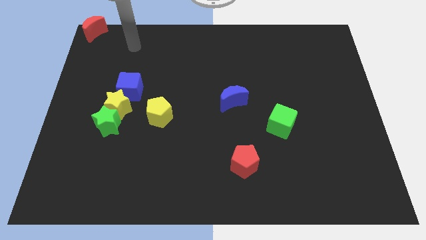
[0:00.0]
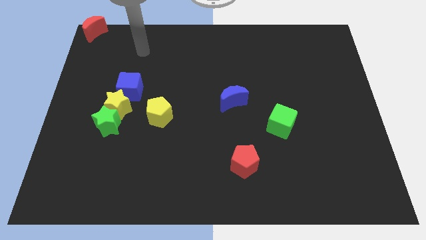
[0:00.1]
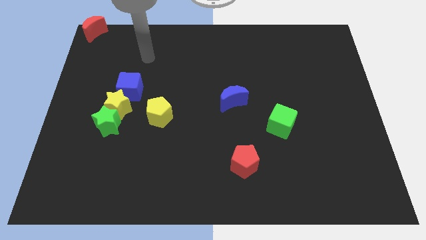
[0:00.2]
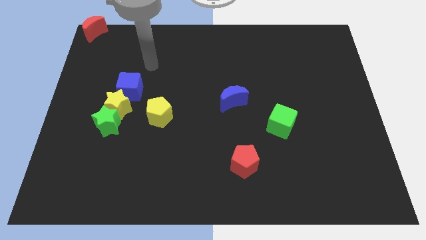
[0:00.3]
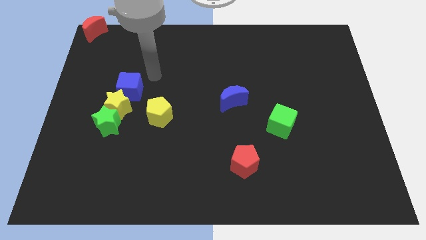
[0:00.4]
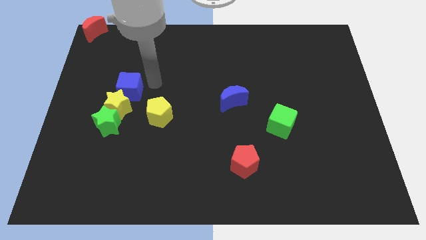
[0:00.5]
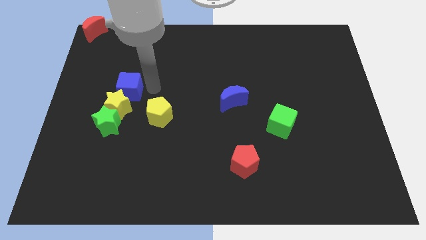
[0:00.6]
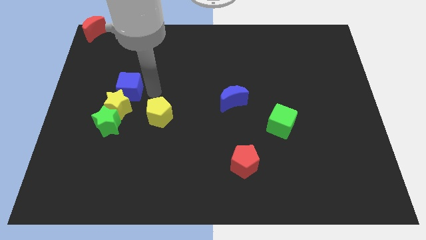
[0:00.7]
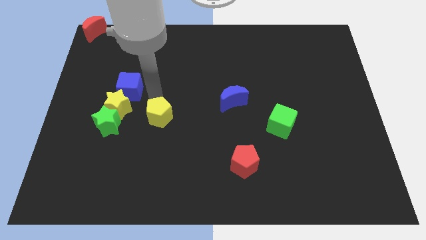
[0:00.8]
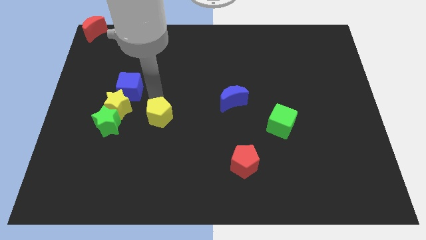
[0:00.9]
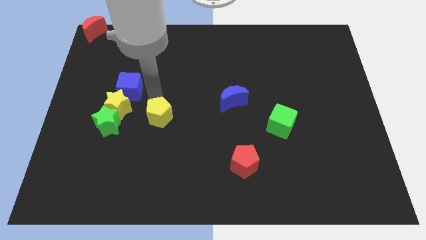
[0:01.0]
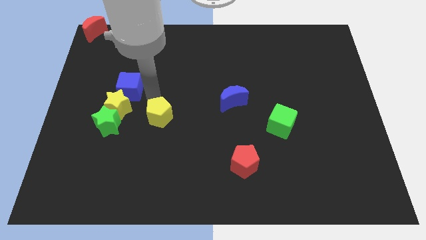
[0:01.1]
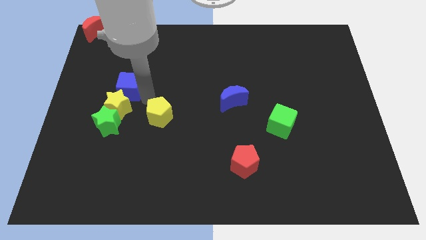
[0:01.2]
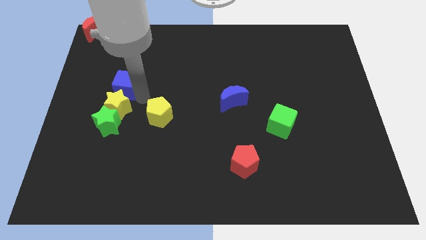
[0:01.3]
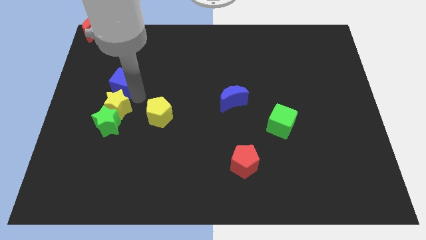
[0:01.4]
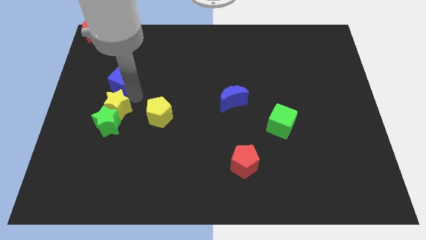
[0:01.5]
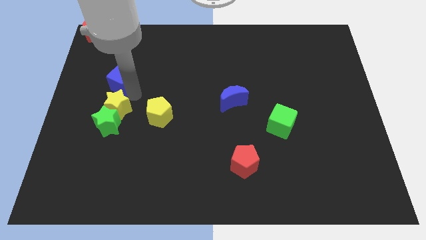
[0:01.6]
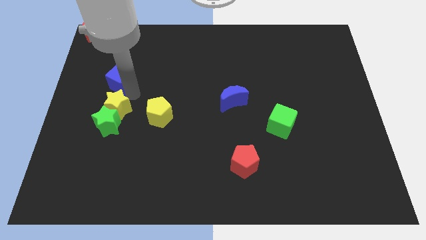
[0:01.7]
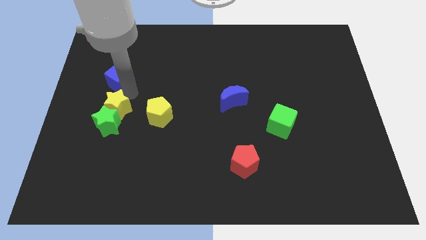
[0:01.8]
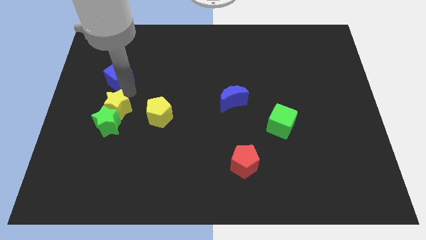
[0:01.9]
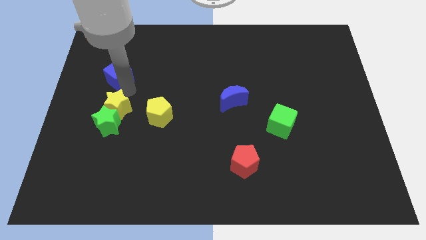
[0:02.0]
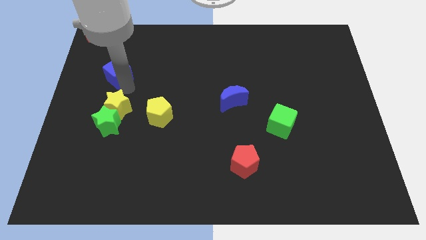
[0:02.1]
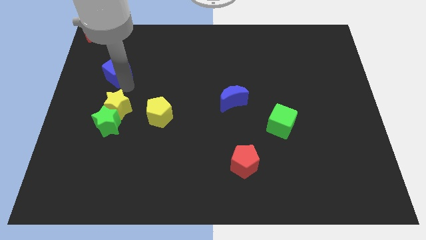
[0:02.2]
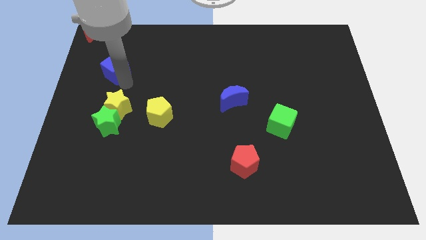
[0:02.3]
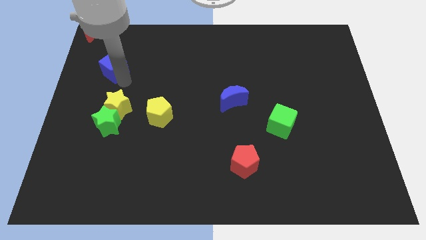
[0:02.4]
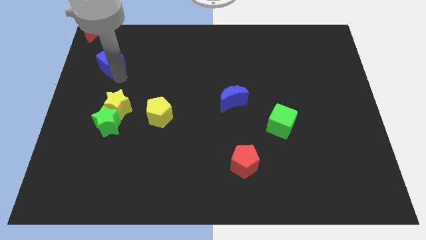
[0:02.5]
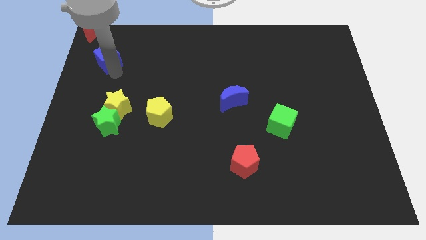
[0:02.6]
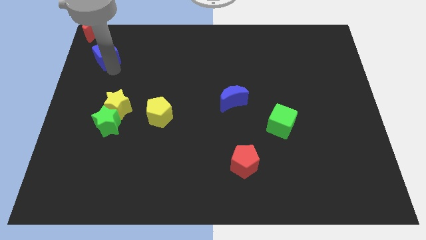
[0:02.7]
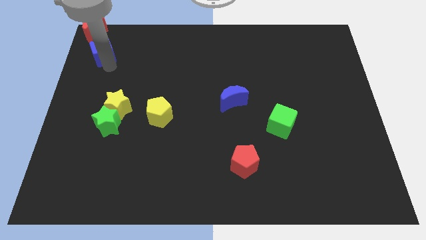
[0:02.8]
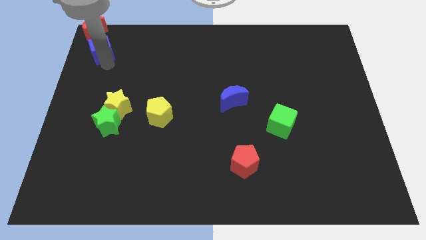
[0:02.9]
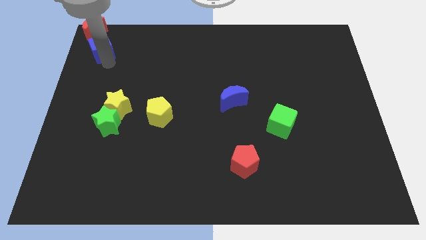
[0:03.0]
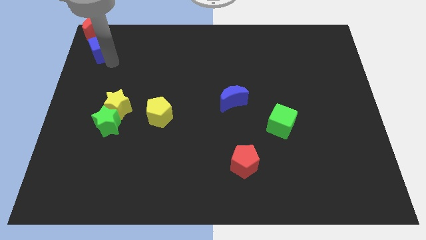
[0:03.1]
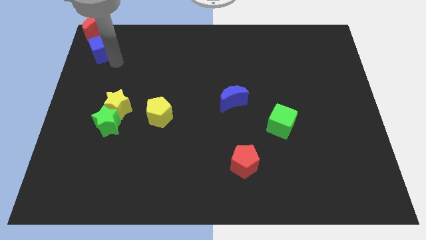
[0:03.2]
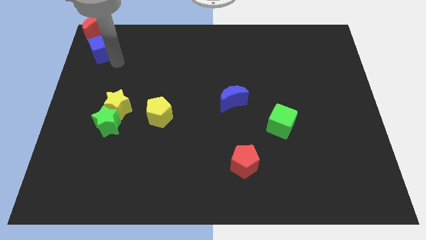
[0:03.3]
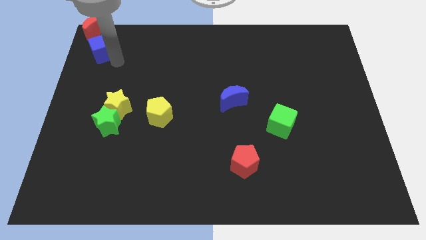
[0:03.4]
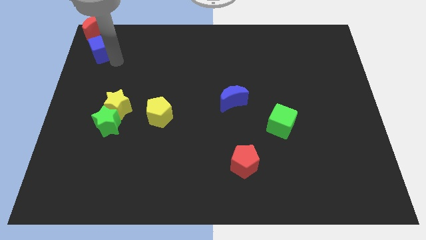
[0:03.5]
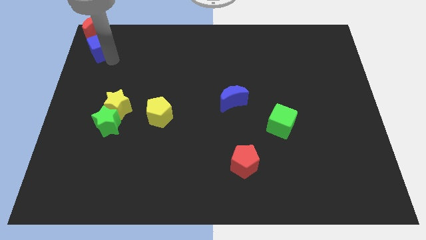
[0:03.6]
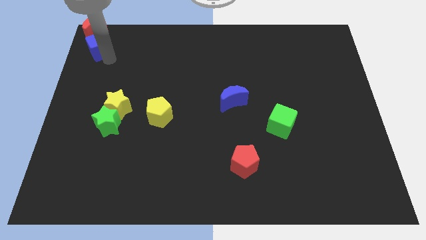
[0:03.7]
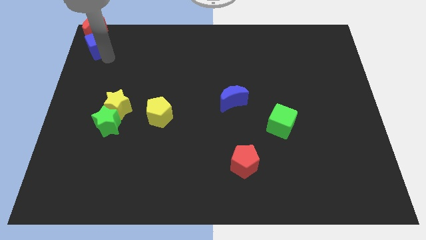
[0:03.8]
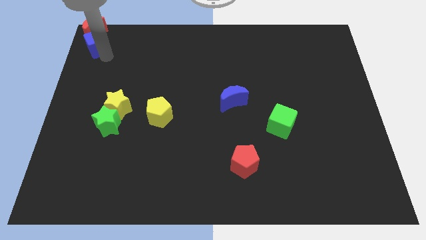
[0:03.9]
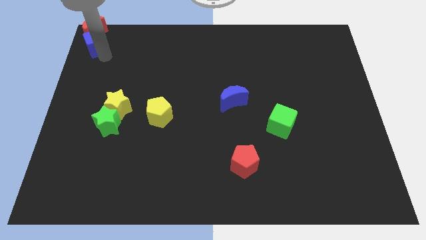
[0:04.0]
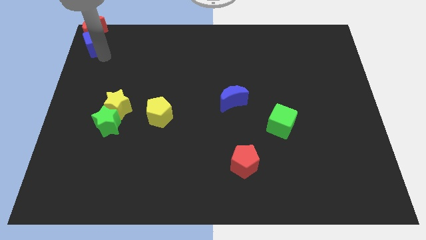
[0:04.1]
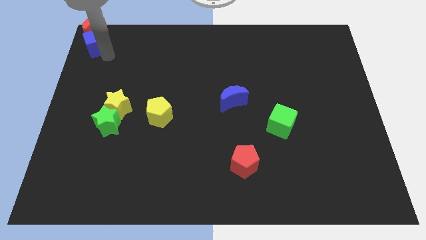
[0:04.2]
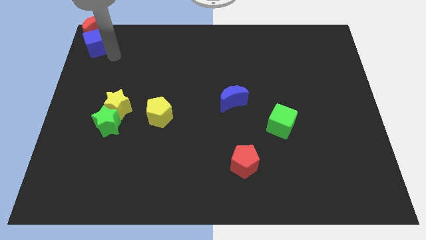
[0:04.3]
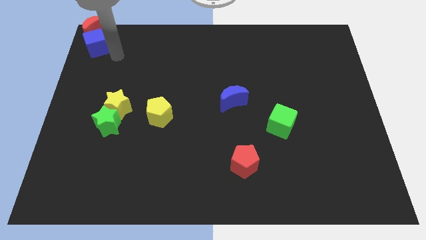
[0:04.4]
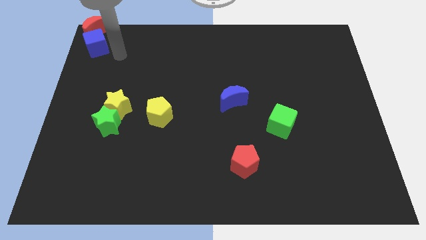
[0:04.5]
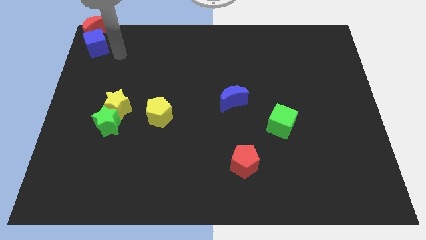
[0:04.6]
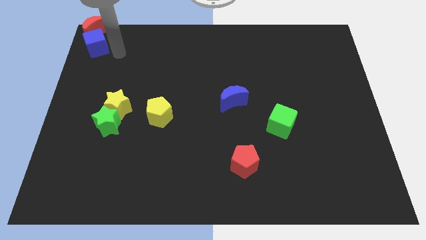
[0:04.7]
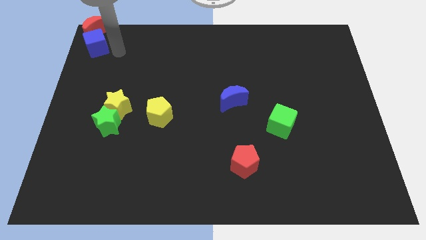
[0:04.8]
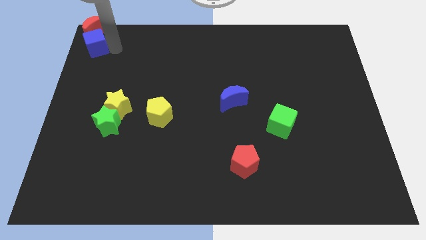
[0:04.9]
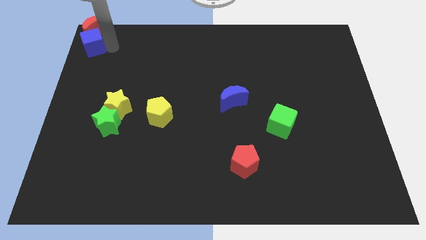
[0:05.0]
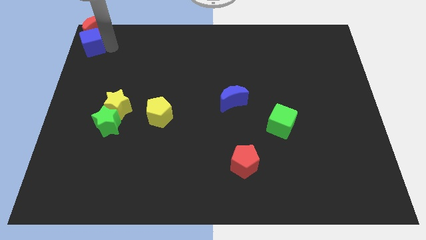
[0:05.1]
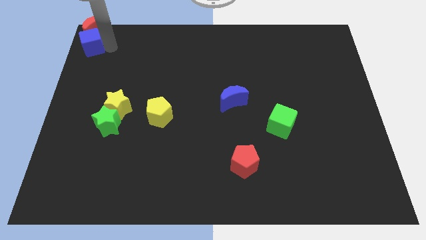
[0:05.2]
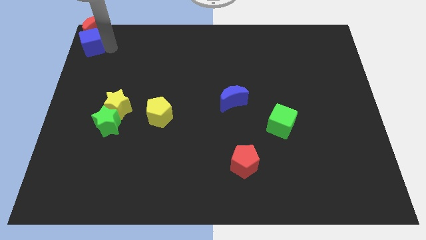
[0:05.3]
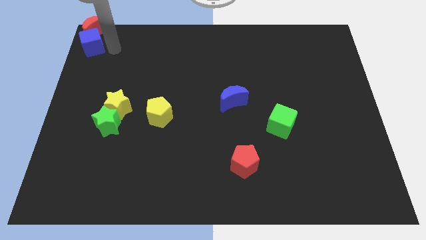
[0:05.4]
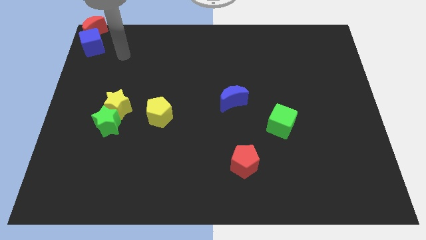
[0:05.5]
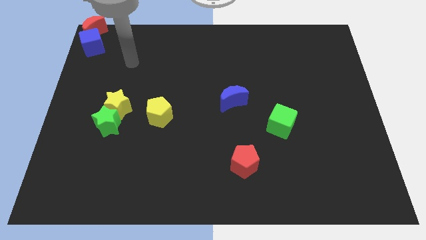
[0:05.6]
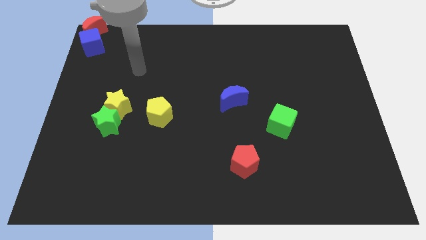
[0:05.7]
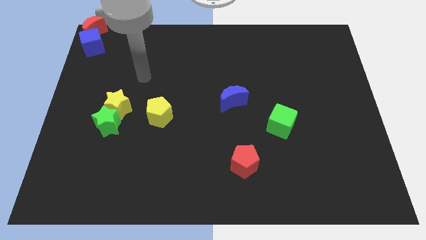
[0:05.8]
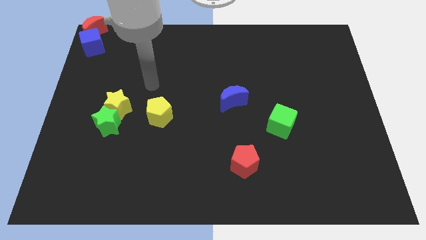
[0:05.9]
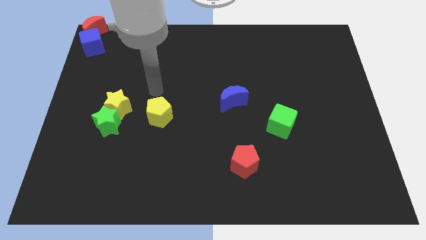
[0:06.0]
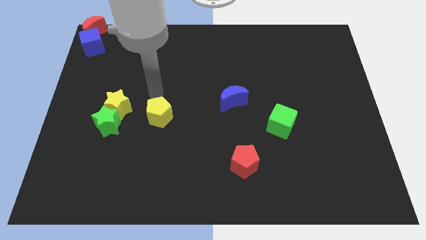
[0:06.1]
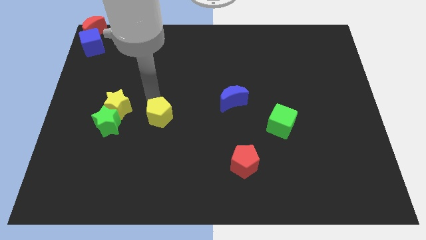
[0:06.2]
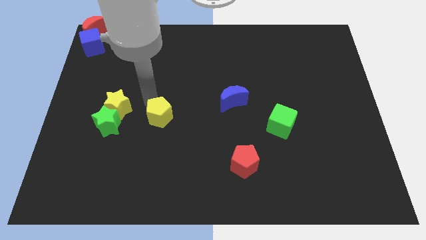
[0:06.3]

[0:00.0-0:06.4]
push the blue cube to the top left corner

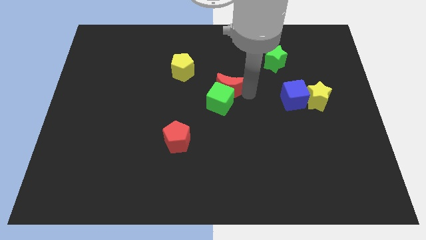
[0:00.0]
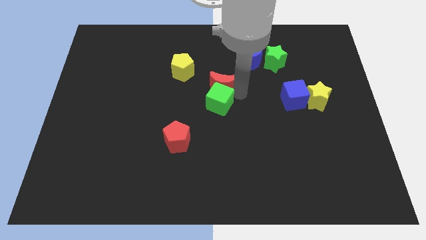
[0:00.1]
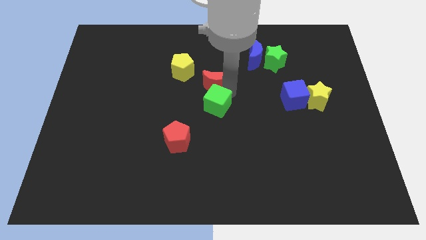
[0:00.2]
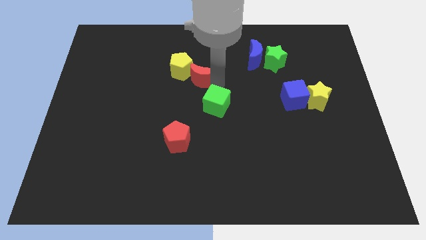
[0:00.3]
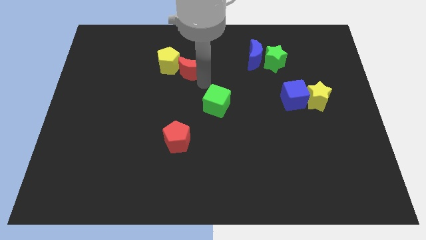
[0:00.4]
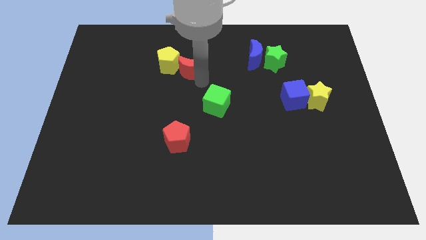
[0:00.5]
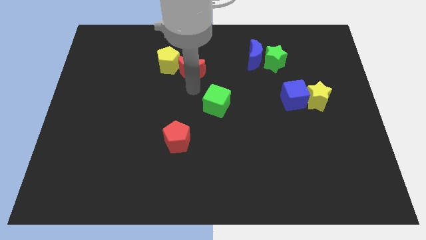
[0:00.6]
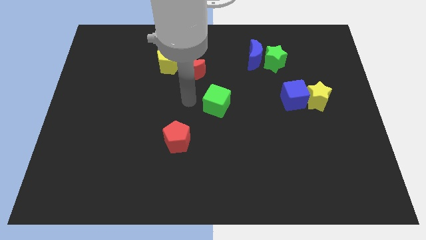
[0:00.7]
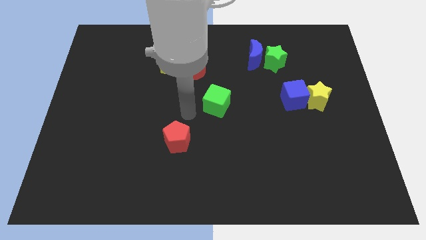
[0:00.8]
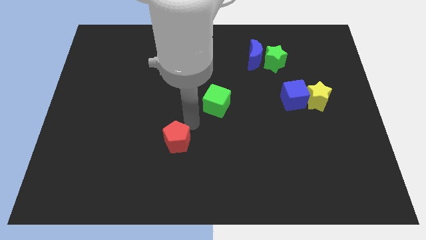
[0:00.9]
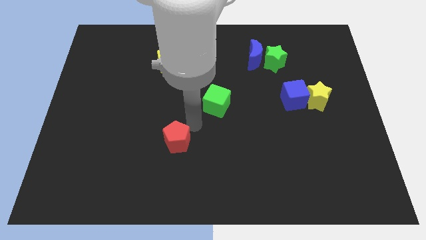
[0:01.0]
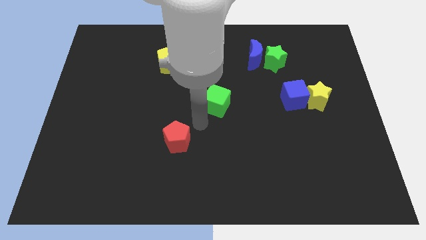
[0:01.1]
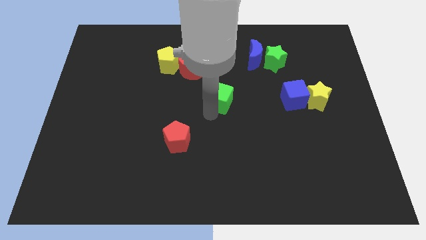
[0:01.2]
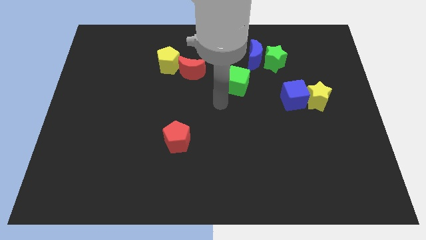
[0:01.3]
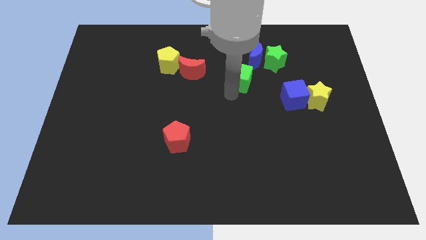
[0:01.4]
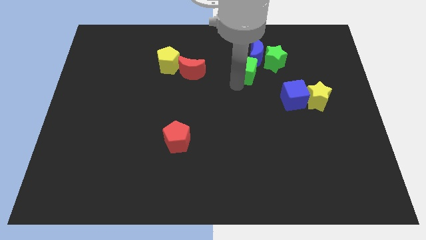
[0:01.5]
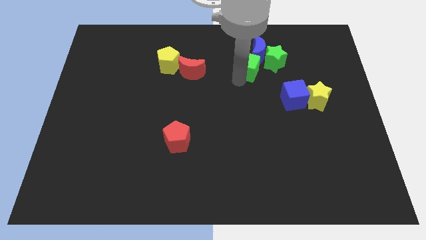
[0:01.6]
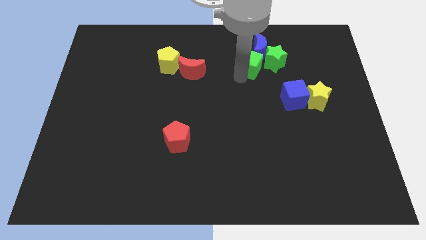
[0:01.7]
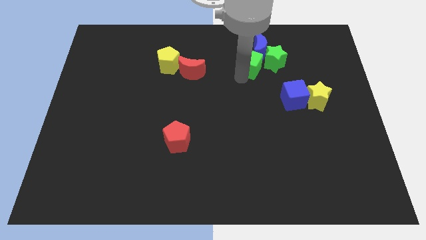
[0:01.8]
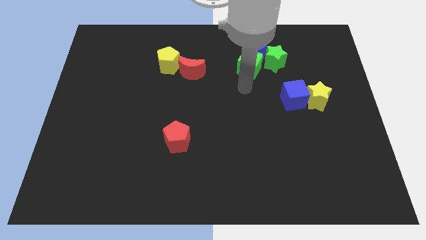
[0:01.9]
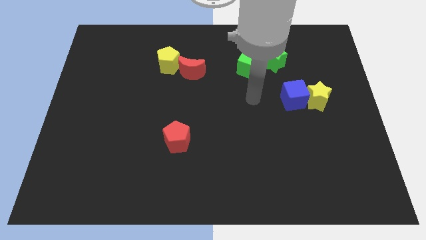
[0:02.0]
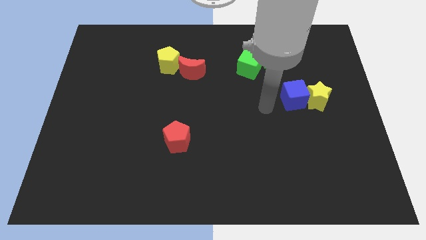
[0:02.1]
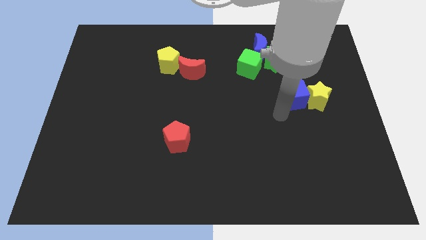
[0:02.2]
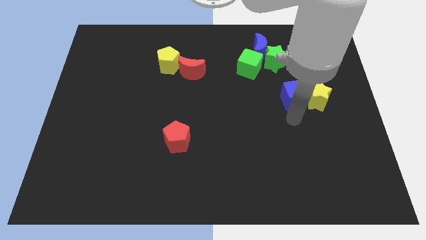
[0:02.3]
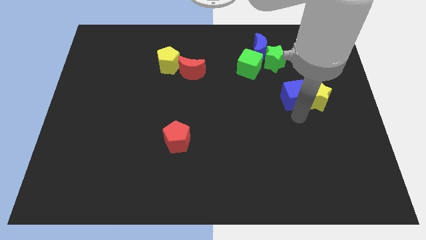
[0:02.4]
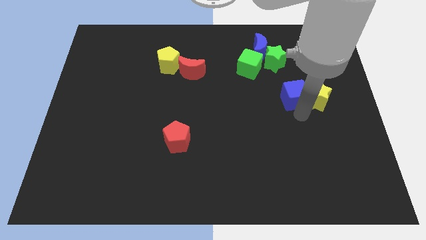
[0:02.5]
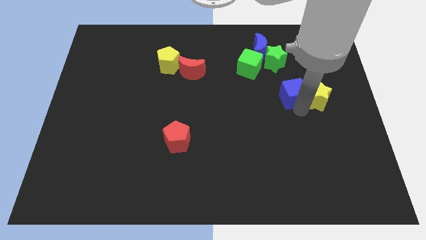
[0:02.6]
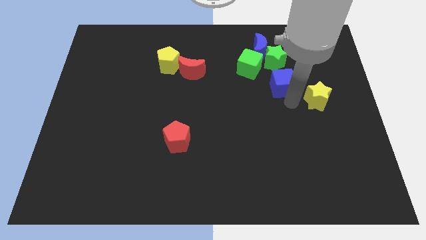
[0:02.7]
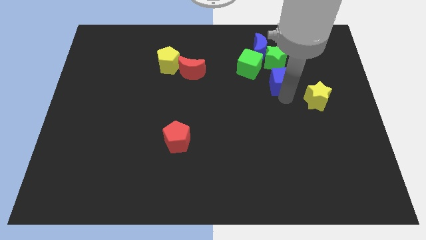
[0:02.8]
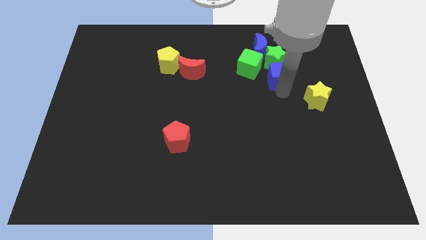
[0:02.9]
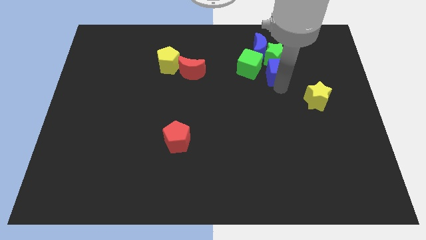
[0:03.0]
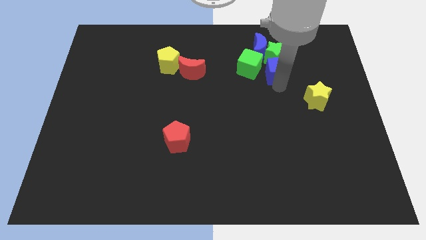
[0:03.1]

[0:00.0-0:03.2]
push the blue cube towards green star
